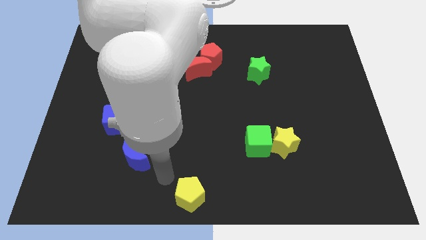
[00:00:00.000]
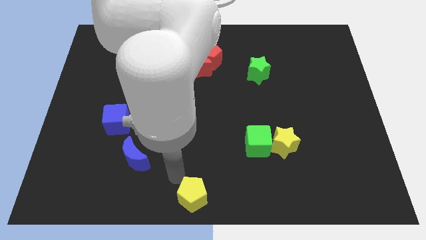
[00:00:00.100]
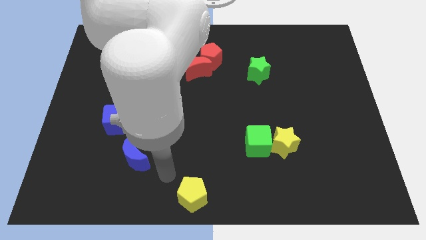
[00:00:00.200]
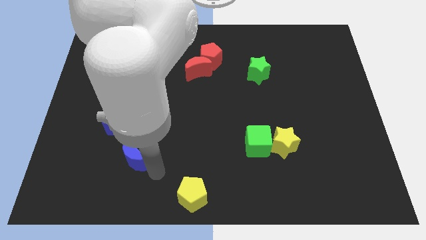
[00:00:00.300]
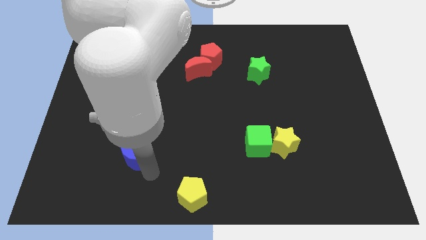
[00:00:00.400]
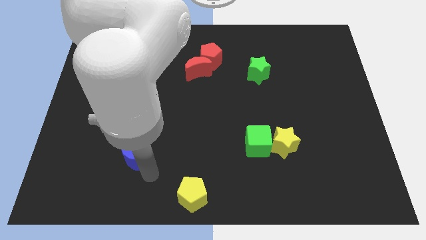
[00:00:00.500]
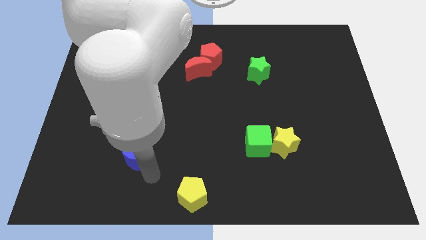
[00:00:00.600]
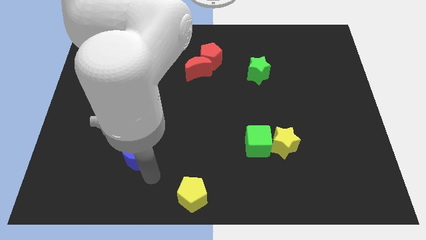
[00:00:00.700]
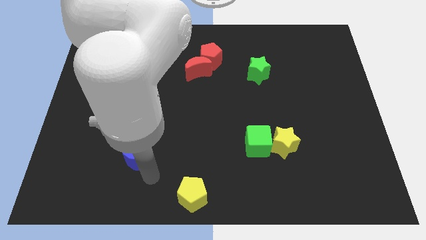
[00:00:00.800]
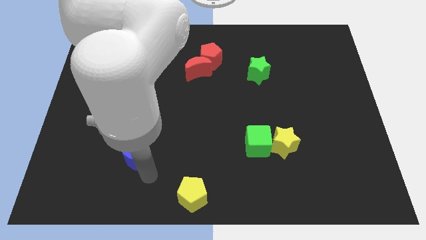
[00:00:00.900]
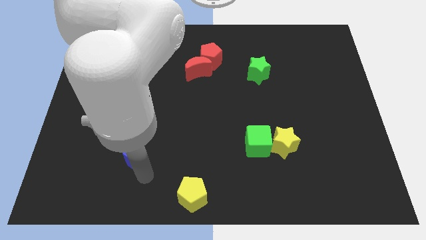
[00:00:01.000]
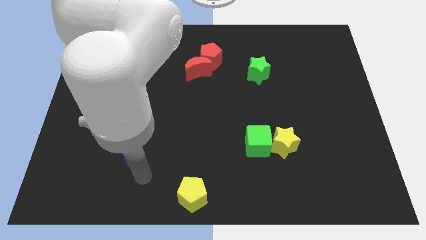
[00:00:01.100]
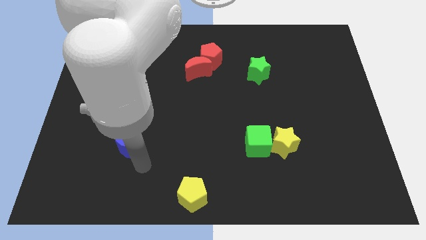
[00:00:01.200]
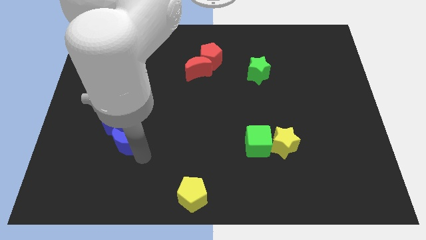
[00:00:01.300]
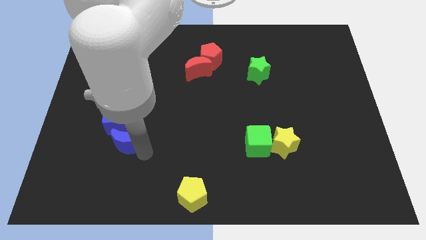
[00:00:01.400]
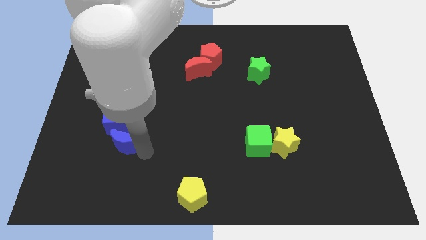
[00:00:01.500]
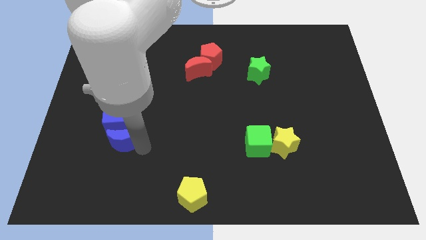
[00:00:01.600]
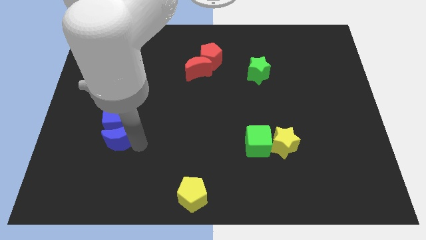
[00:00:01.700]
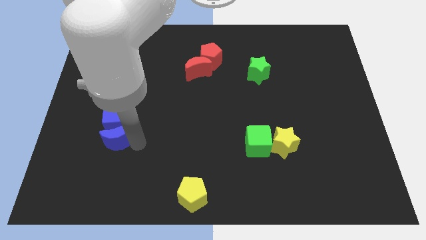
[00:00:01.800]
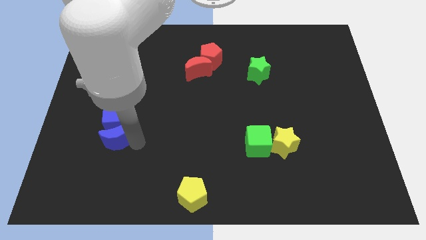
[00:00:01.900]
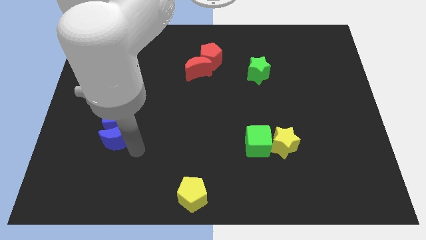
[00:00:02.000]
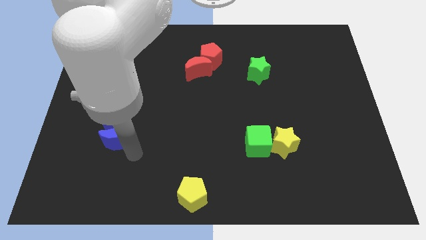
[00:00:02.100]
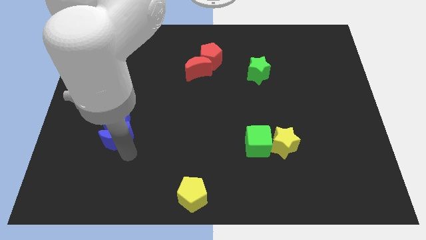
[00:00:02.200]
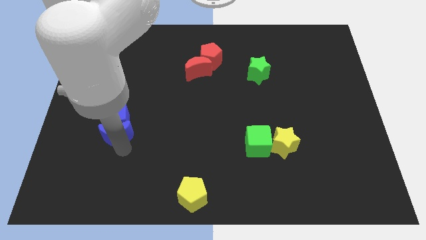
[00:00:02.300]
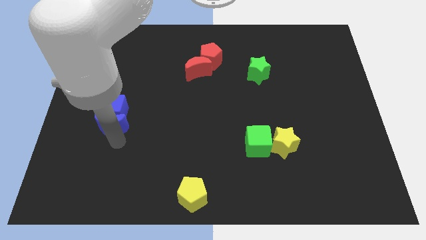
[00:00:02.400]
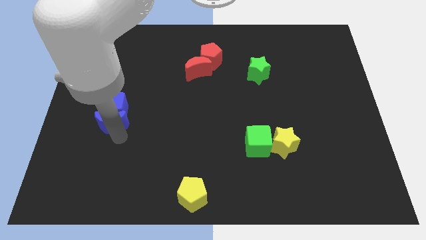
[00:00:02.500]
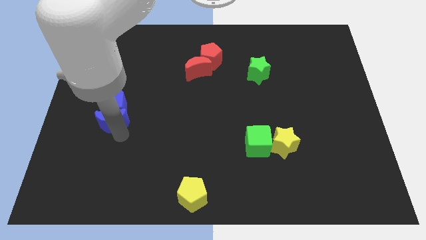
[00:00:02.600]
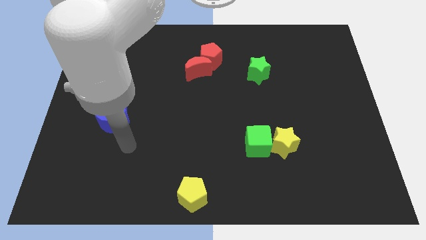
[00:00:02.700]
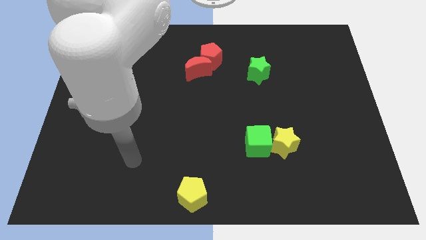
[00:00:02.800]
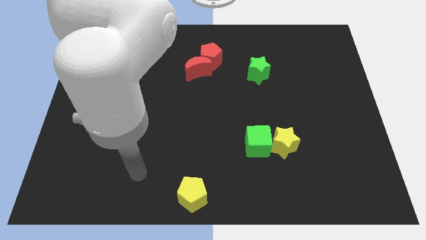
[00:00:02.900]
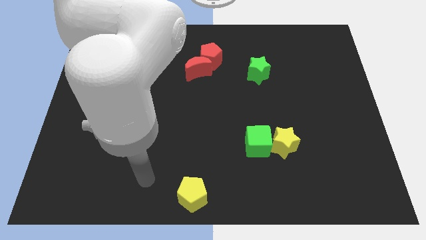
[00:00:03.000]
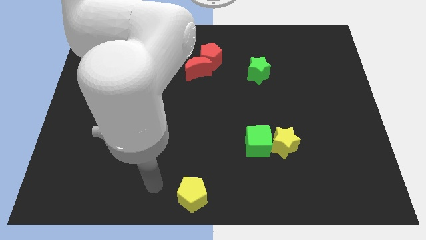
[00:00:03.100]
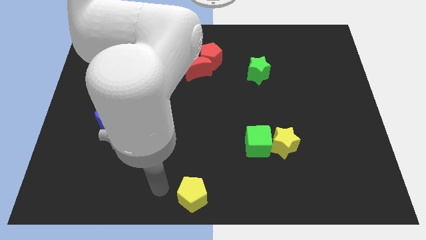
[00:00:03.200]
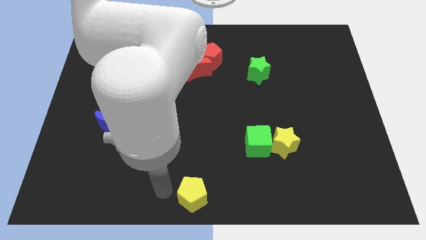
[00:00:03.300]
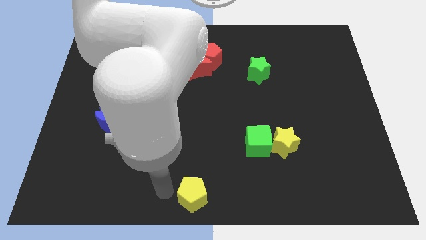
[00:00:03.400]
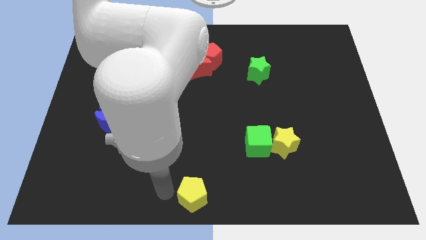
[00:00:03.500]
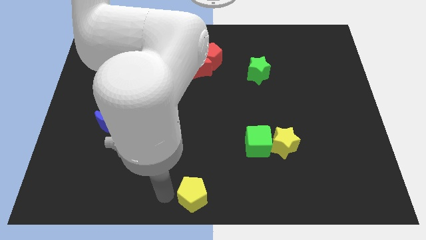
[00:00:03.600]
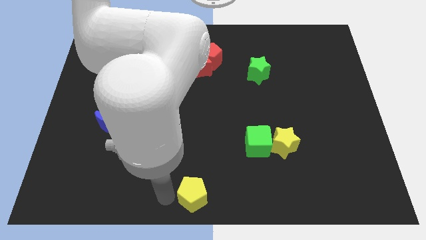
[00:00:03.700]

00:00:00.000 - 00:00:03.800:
push the blue moon and blue cube upward

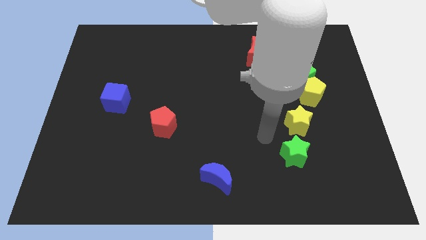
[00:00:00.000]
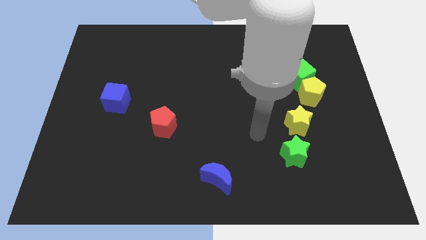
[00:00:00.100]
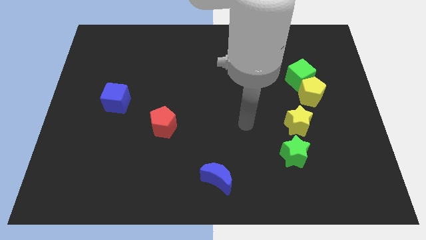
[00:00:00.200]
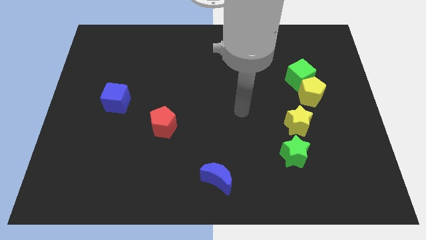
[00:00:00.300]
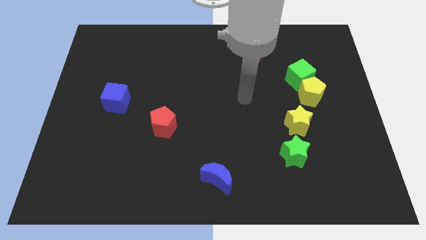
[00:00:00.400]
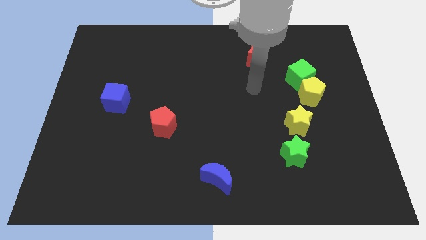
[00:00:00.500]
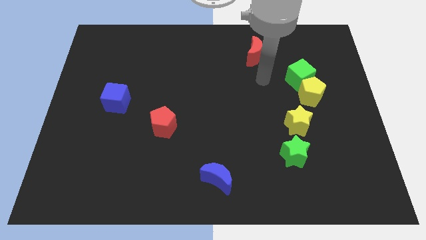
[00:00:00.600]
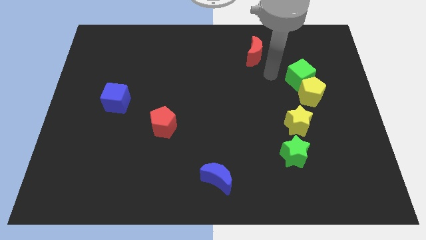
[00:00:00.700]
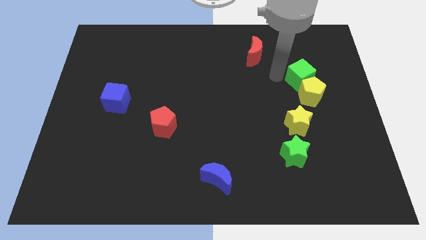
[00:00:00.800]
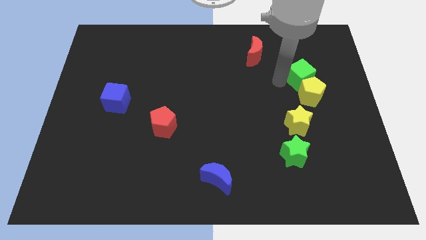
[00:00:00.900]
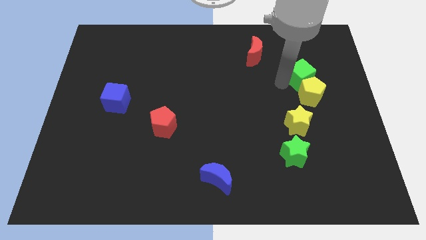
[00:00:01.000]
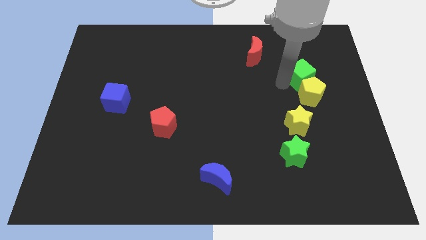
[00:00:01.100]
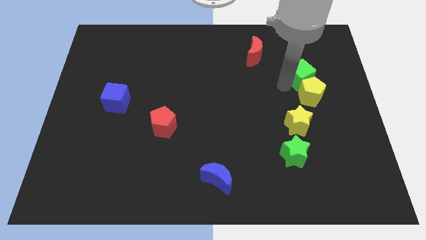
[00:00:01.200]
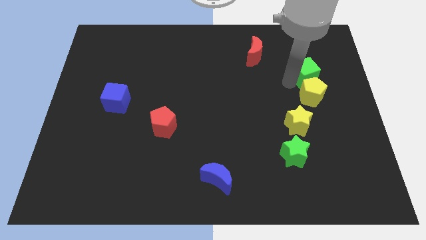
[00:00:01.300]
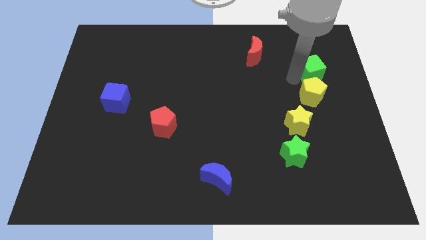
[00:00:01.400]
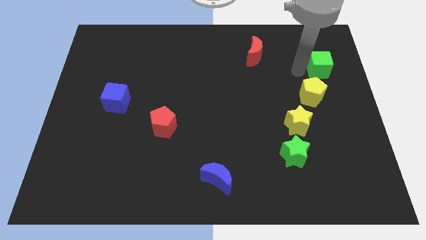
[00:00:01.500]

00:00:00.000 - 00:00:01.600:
move the green cube slightly to the right

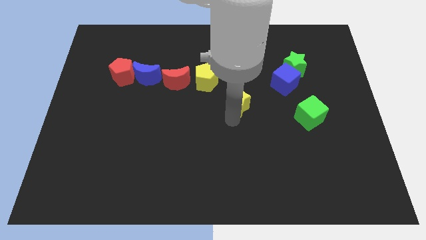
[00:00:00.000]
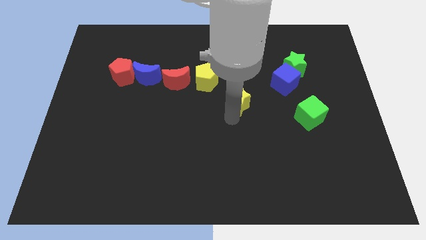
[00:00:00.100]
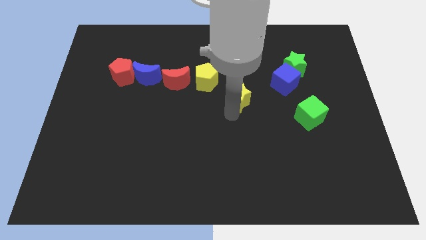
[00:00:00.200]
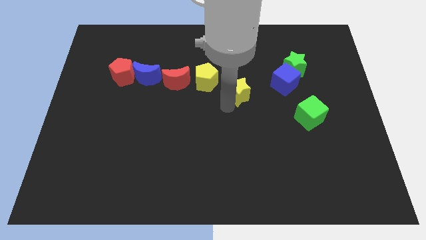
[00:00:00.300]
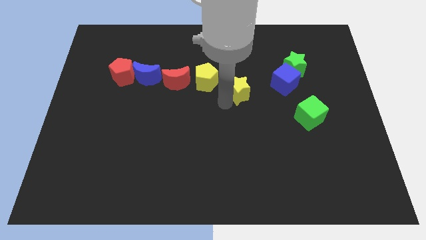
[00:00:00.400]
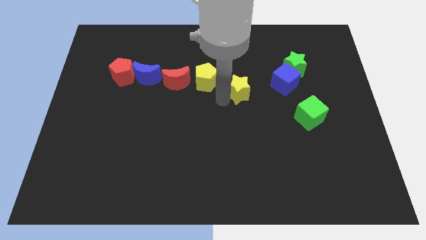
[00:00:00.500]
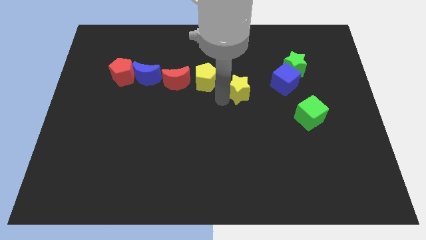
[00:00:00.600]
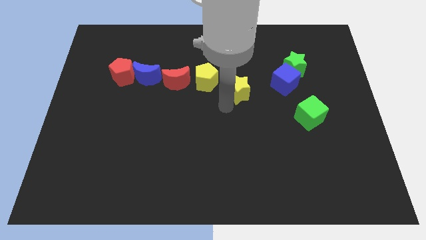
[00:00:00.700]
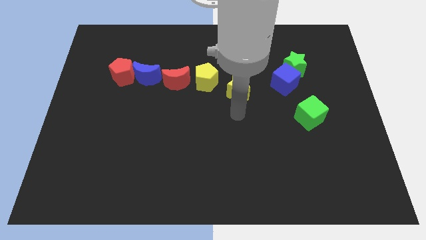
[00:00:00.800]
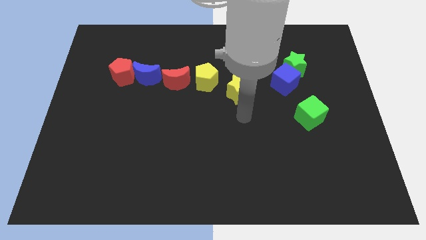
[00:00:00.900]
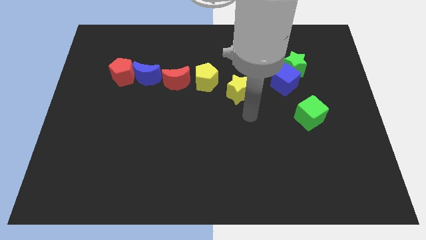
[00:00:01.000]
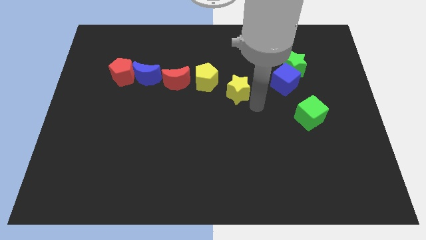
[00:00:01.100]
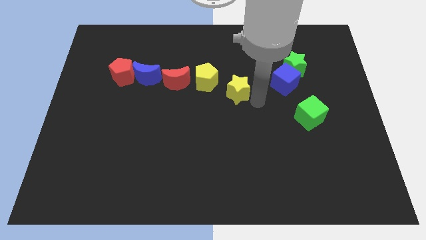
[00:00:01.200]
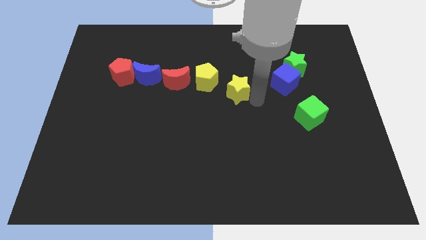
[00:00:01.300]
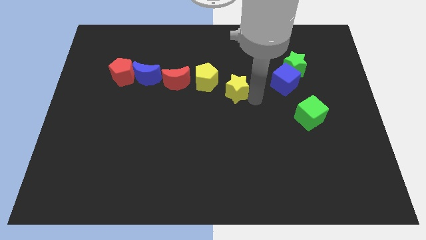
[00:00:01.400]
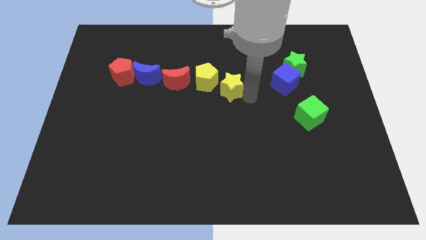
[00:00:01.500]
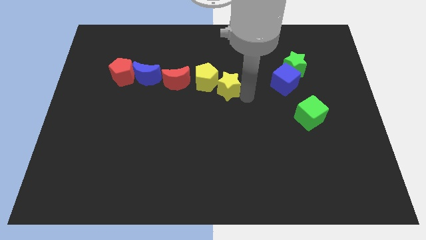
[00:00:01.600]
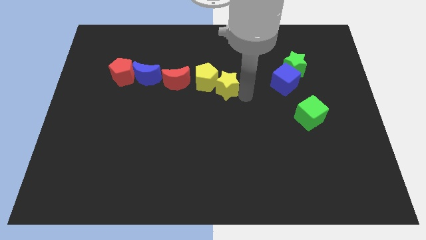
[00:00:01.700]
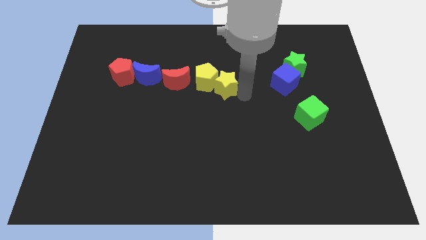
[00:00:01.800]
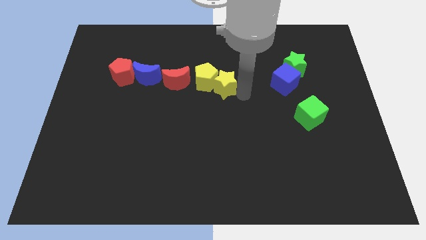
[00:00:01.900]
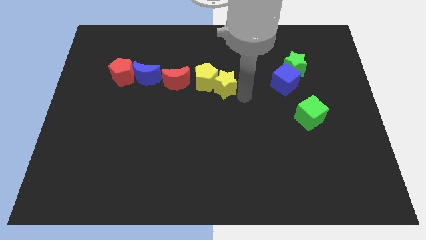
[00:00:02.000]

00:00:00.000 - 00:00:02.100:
move the yellow star to the right of the yellow pentagon

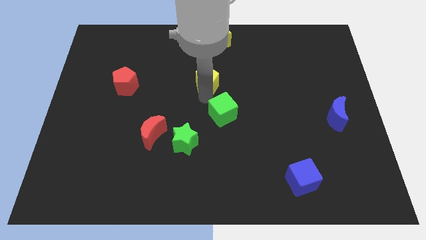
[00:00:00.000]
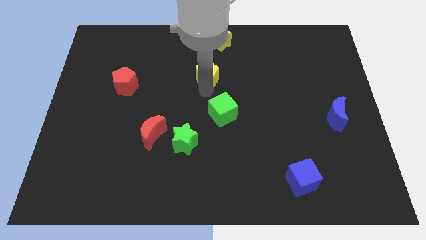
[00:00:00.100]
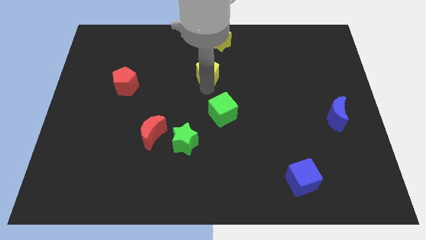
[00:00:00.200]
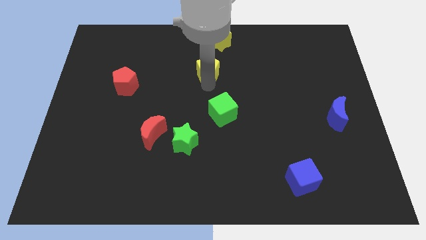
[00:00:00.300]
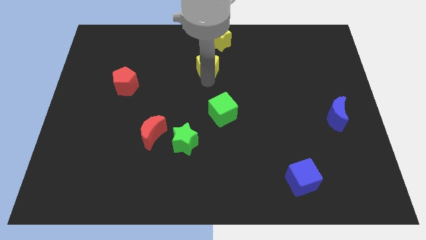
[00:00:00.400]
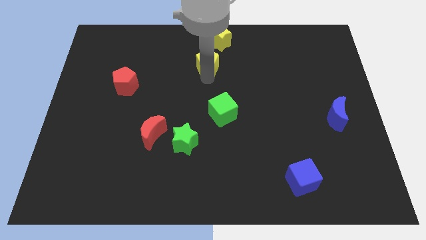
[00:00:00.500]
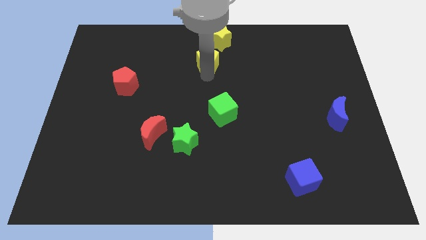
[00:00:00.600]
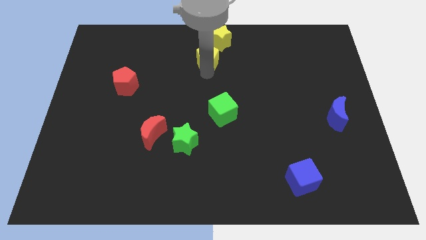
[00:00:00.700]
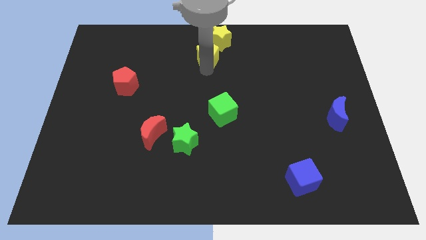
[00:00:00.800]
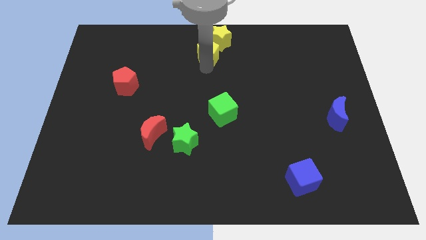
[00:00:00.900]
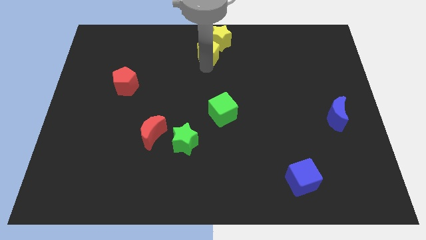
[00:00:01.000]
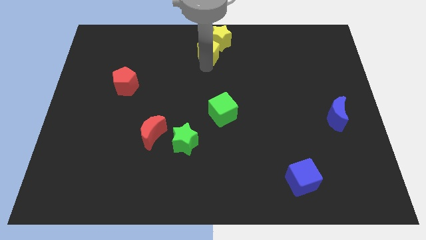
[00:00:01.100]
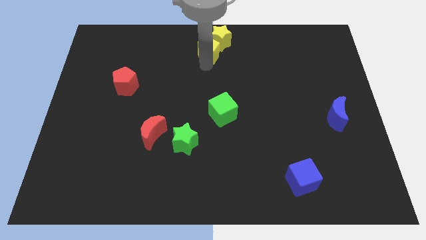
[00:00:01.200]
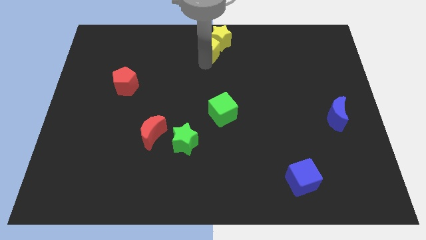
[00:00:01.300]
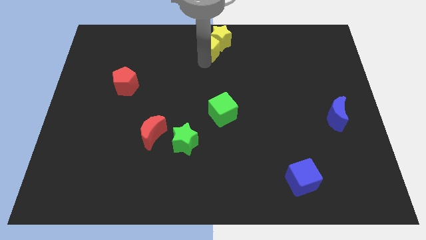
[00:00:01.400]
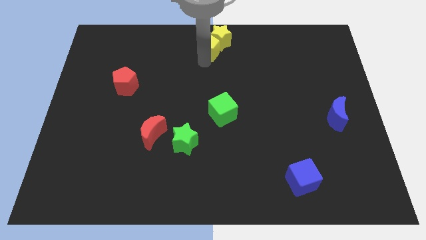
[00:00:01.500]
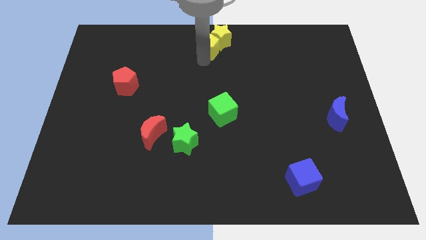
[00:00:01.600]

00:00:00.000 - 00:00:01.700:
push the yellow pentagon towards the yellow star
